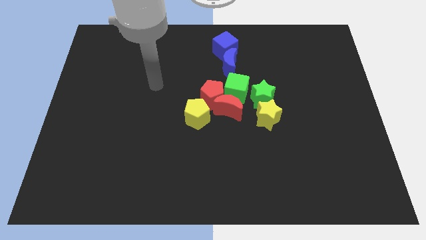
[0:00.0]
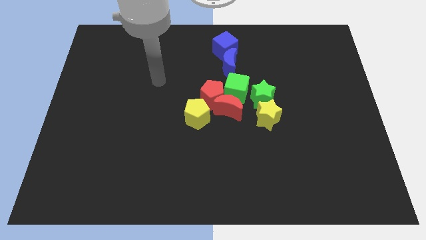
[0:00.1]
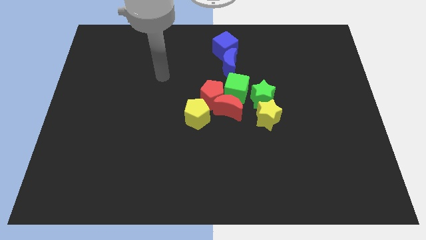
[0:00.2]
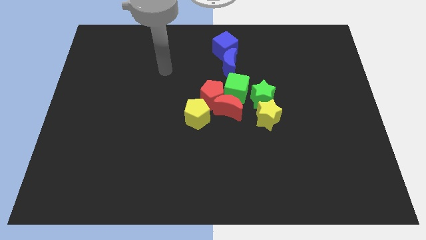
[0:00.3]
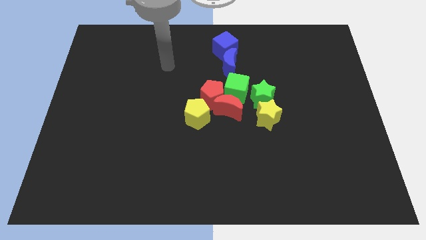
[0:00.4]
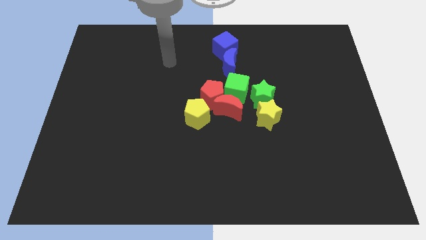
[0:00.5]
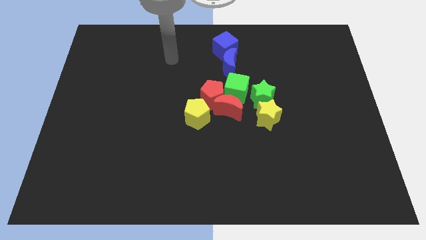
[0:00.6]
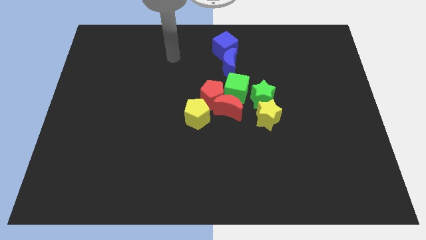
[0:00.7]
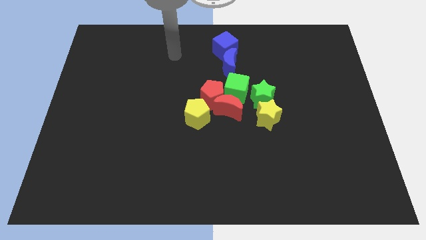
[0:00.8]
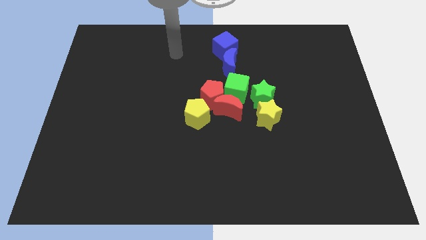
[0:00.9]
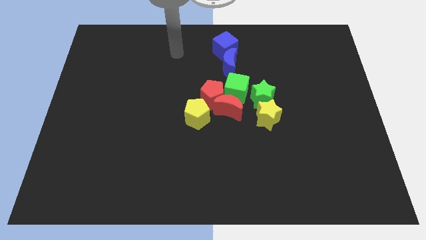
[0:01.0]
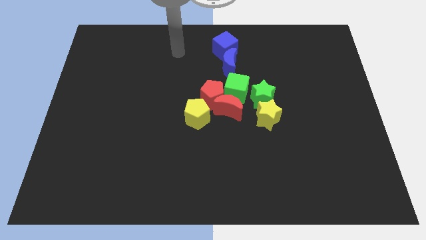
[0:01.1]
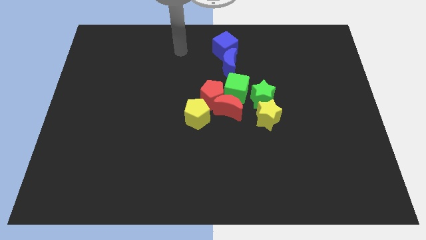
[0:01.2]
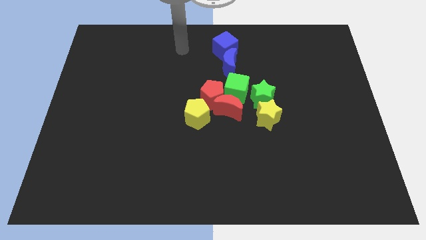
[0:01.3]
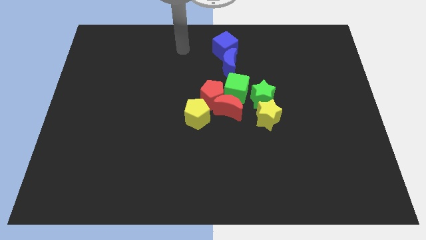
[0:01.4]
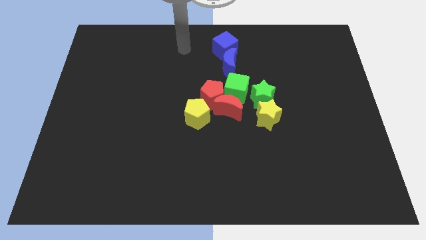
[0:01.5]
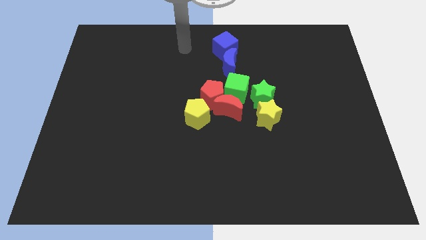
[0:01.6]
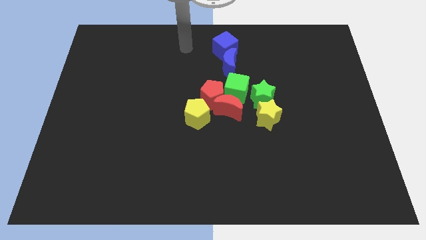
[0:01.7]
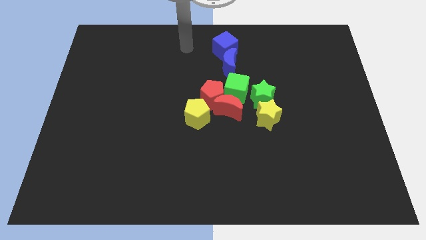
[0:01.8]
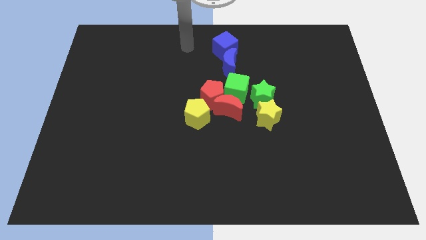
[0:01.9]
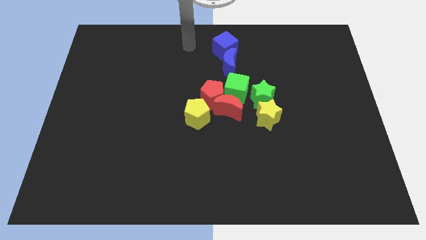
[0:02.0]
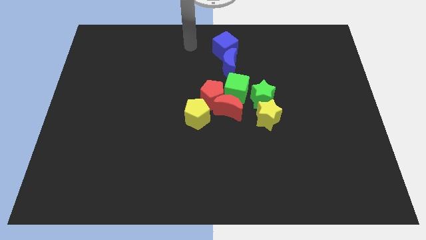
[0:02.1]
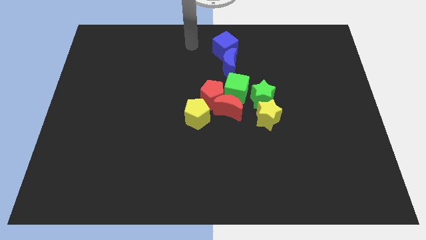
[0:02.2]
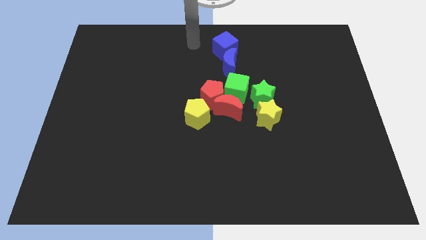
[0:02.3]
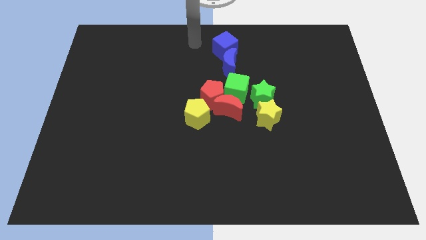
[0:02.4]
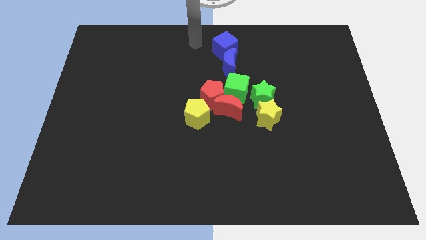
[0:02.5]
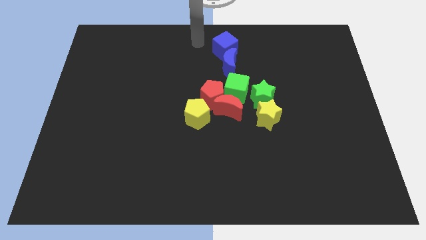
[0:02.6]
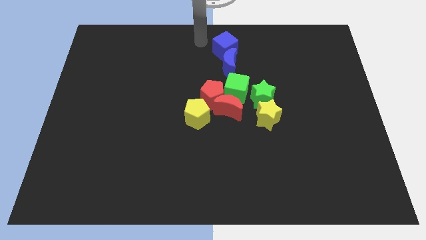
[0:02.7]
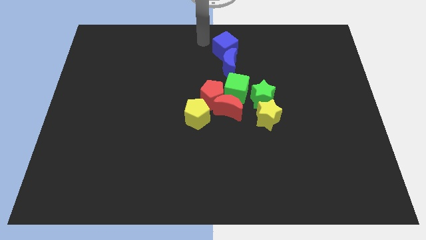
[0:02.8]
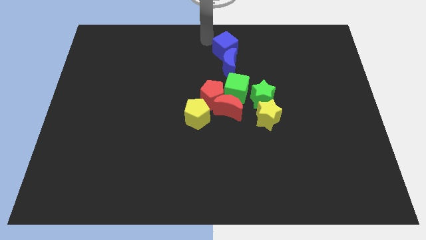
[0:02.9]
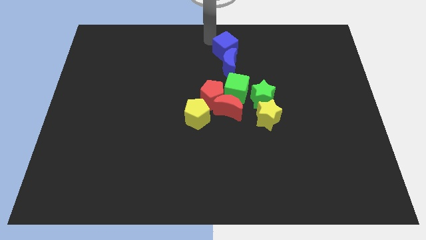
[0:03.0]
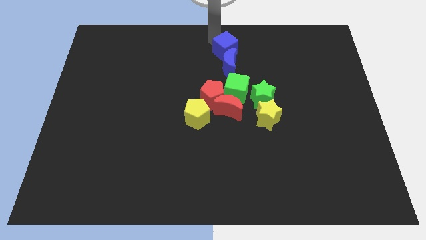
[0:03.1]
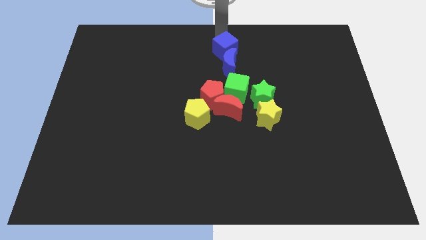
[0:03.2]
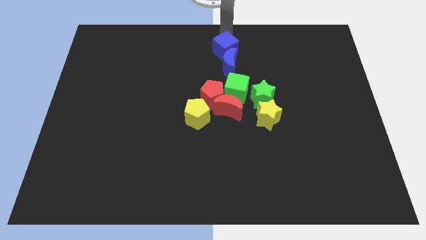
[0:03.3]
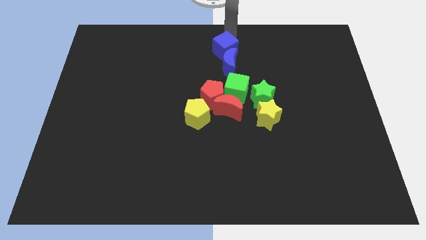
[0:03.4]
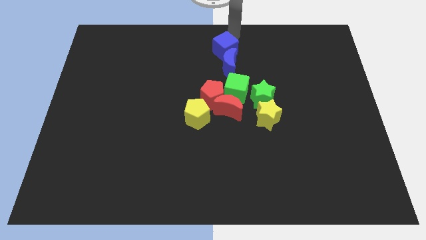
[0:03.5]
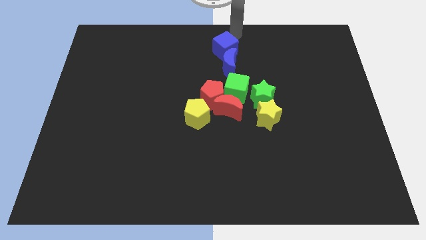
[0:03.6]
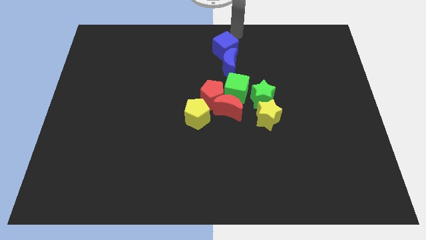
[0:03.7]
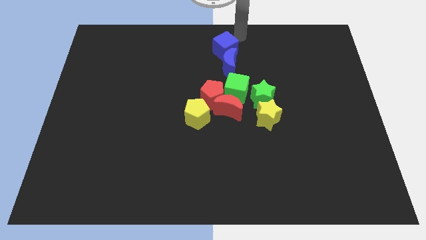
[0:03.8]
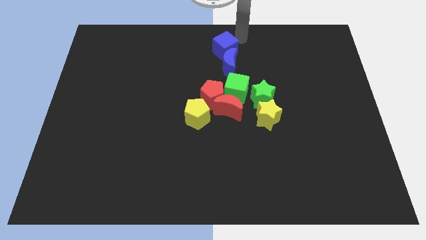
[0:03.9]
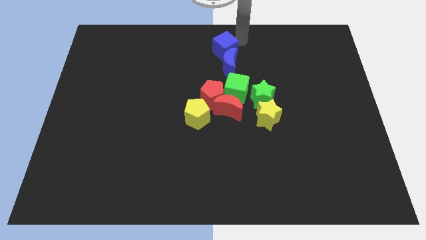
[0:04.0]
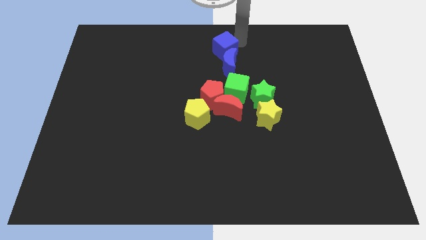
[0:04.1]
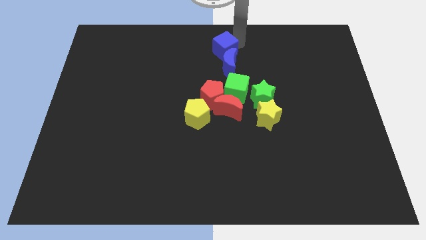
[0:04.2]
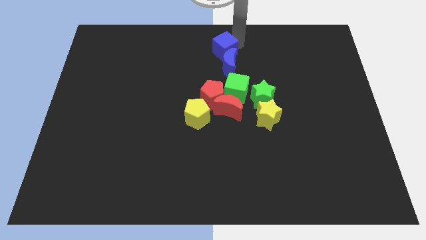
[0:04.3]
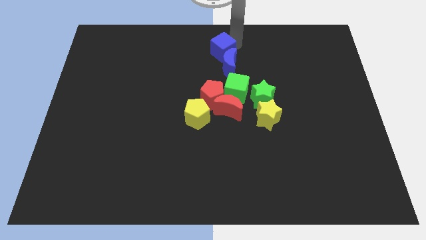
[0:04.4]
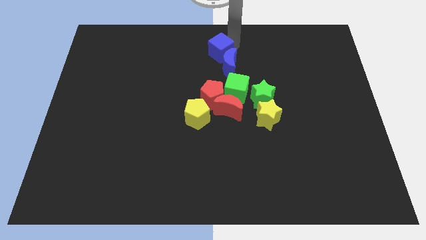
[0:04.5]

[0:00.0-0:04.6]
tap the right side of the blue cube

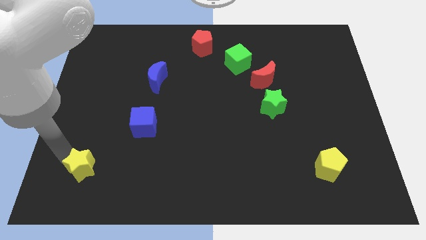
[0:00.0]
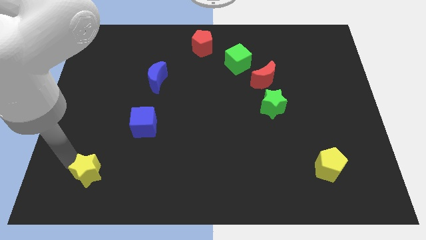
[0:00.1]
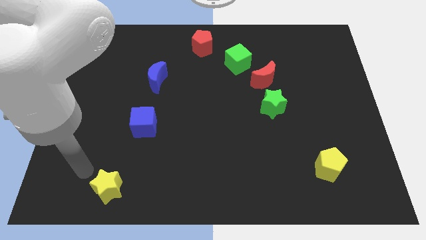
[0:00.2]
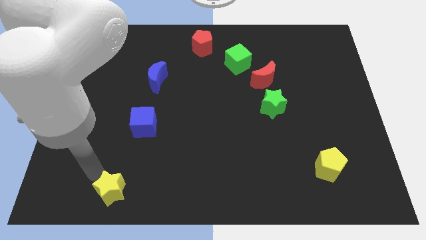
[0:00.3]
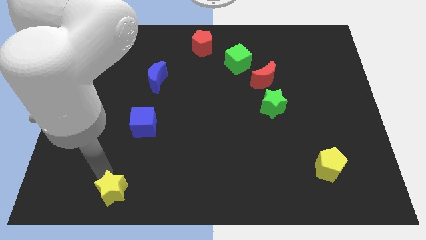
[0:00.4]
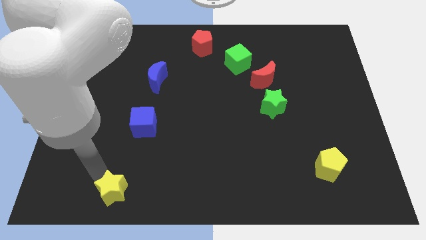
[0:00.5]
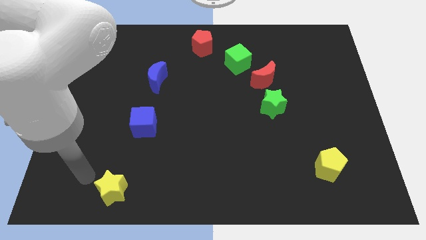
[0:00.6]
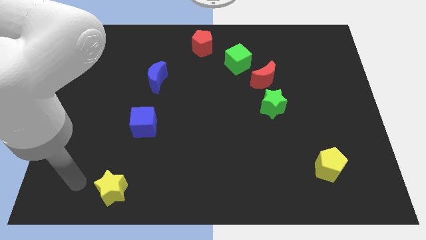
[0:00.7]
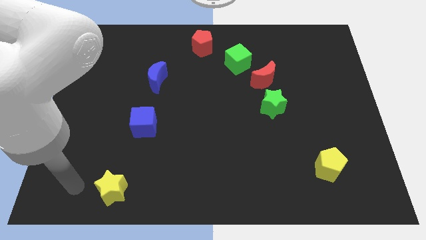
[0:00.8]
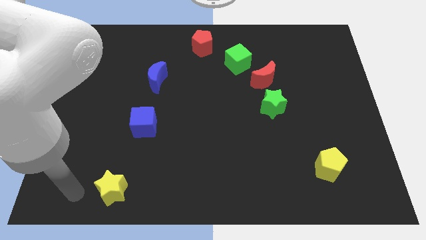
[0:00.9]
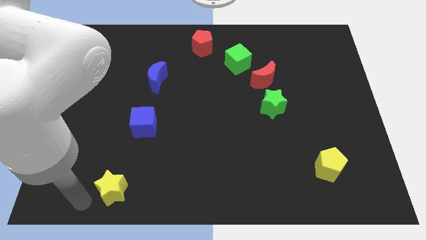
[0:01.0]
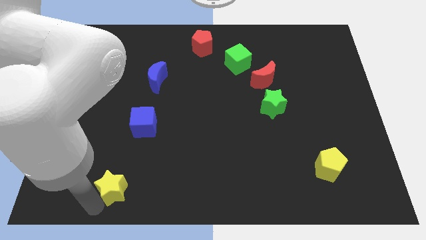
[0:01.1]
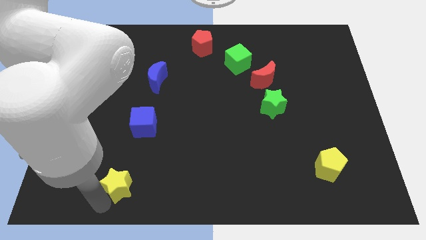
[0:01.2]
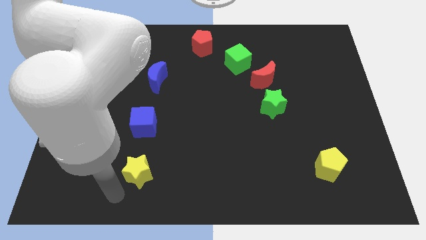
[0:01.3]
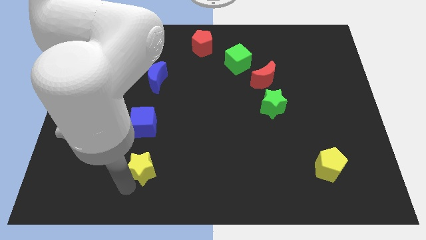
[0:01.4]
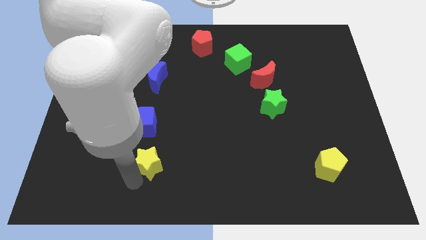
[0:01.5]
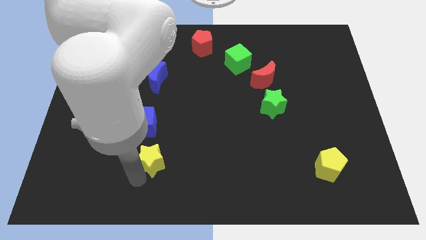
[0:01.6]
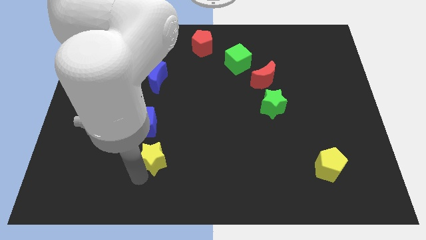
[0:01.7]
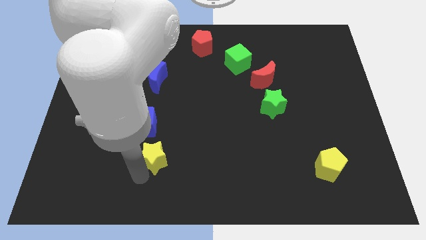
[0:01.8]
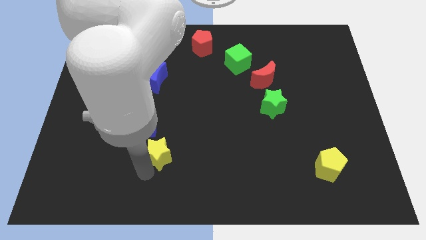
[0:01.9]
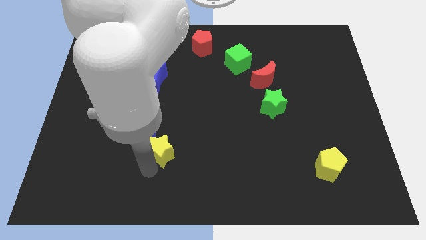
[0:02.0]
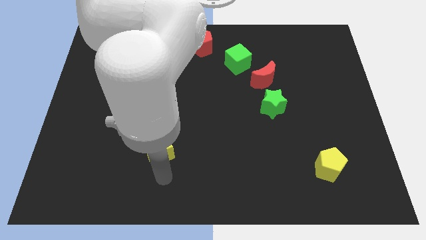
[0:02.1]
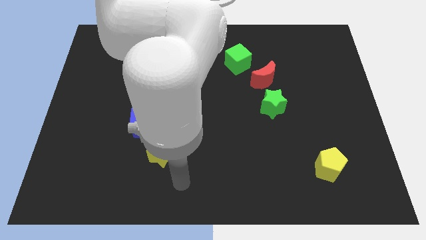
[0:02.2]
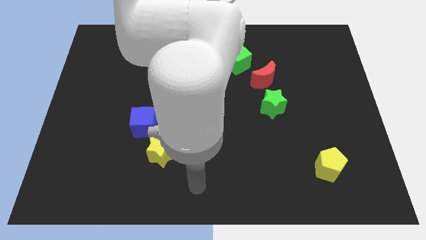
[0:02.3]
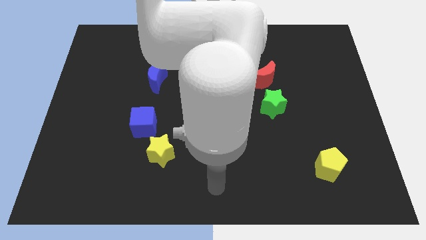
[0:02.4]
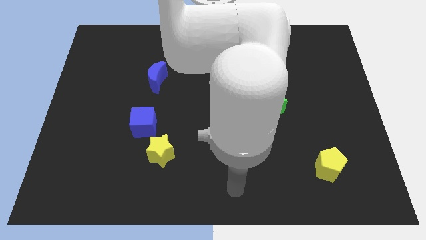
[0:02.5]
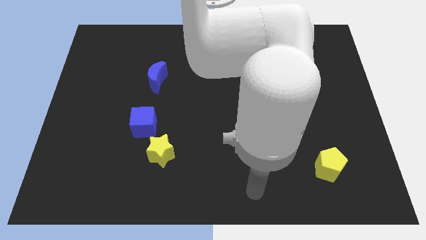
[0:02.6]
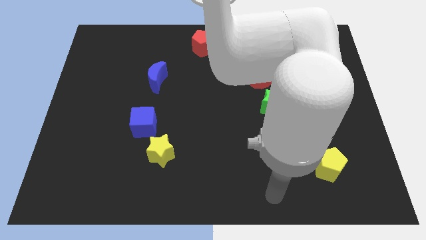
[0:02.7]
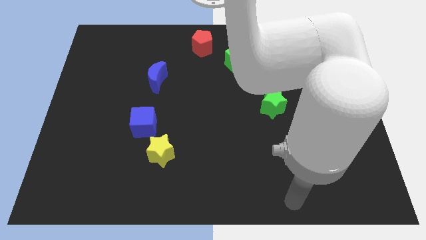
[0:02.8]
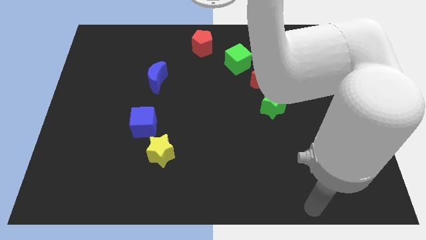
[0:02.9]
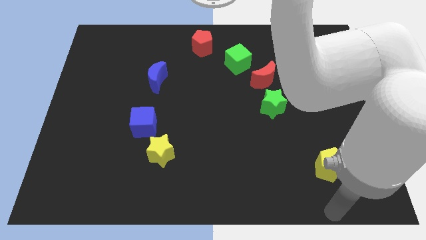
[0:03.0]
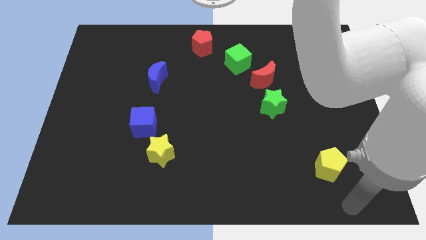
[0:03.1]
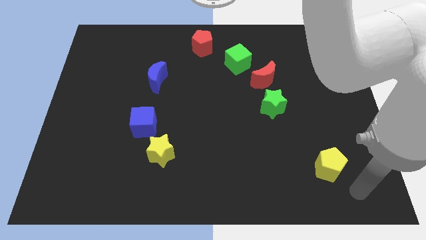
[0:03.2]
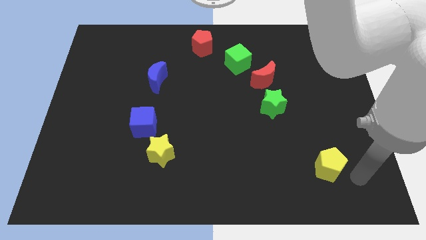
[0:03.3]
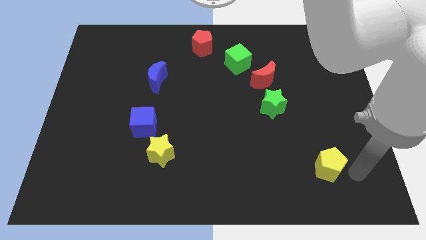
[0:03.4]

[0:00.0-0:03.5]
push yellow star diagonally bottom right to the blue cube

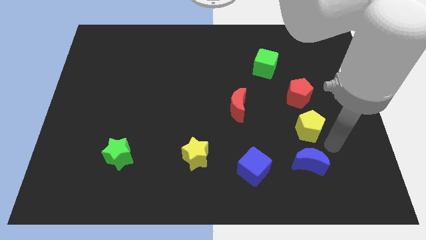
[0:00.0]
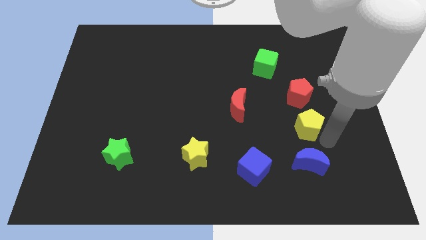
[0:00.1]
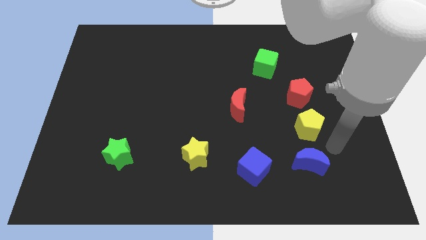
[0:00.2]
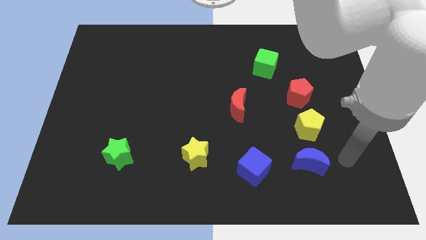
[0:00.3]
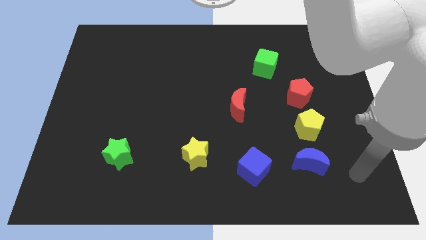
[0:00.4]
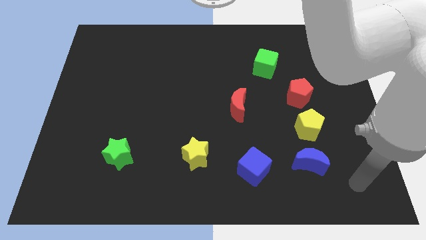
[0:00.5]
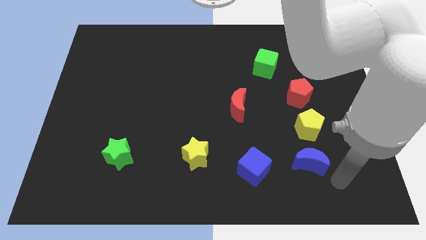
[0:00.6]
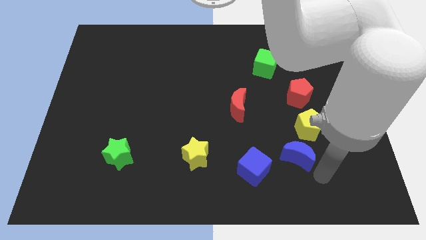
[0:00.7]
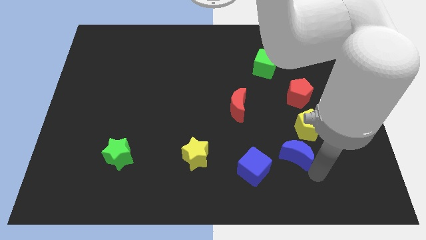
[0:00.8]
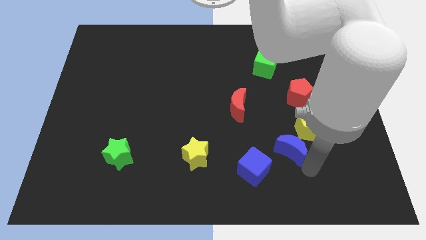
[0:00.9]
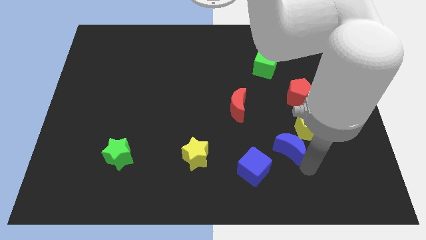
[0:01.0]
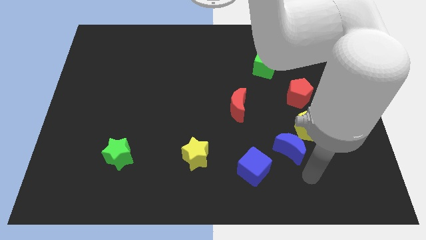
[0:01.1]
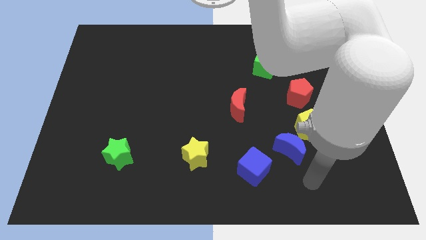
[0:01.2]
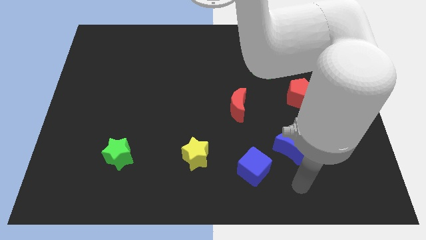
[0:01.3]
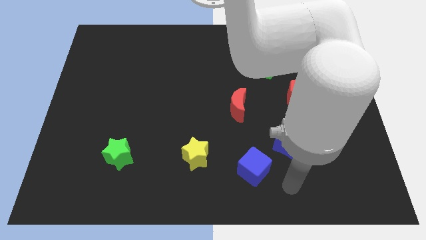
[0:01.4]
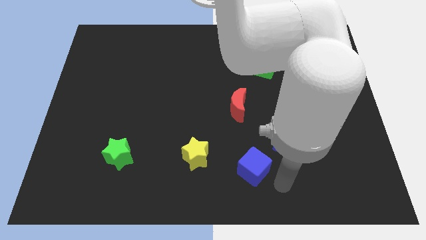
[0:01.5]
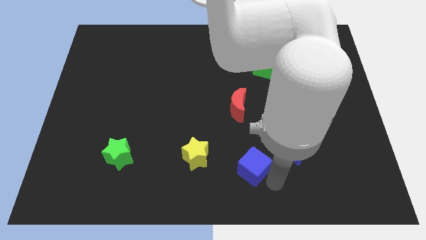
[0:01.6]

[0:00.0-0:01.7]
place blue moon in between the yellow pentagon and blue cube
